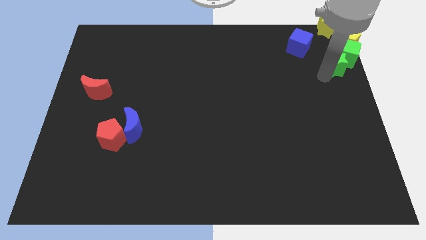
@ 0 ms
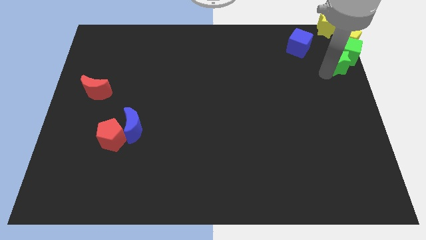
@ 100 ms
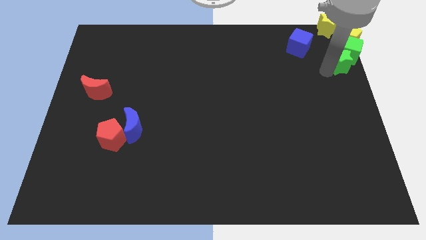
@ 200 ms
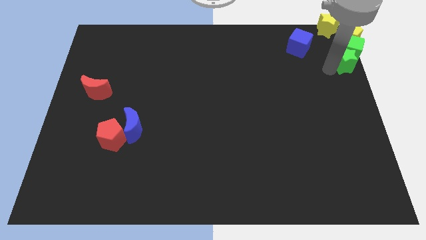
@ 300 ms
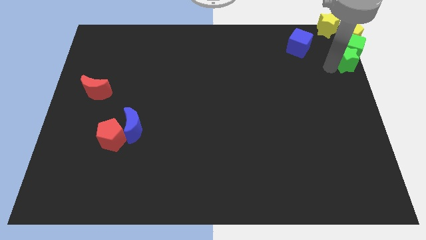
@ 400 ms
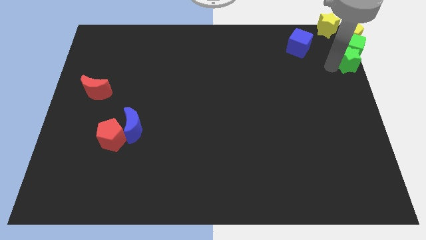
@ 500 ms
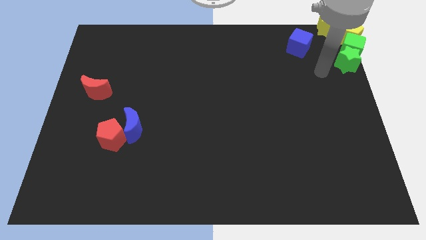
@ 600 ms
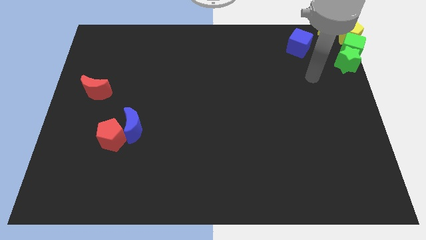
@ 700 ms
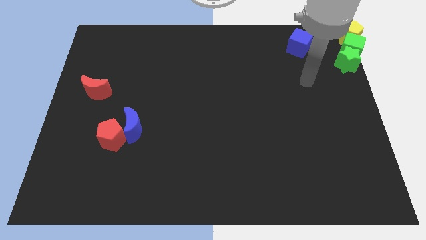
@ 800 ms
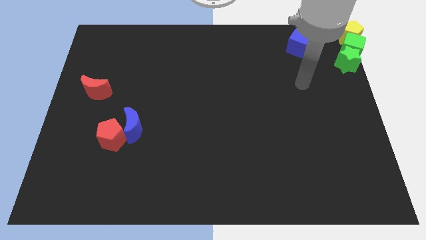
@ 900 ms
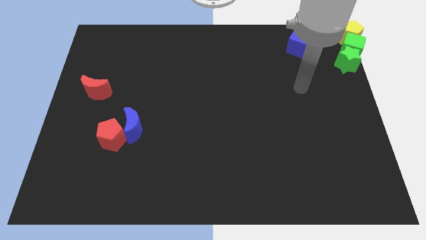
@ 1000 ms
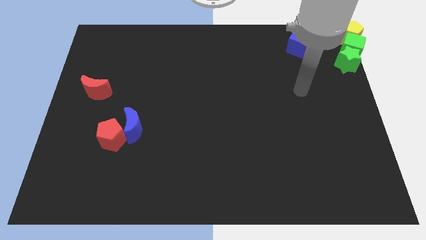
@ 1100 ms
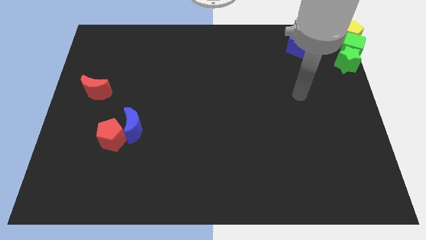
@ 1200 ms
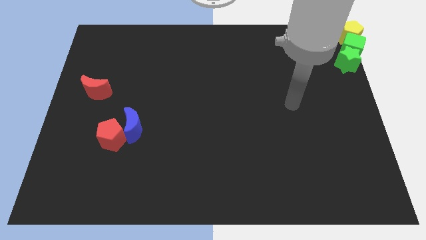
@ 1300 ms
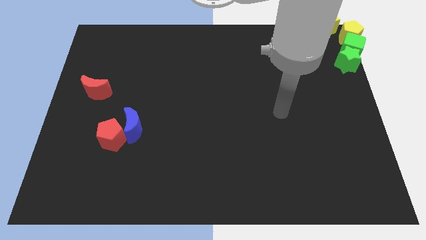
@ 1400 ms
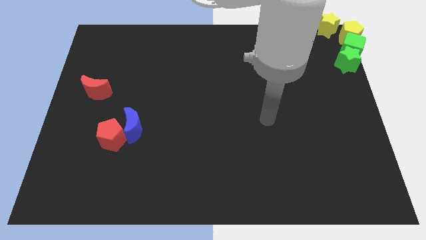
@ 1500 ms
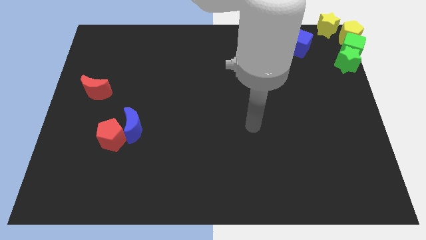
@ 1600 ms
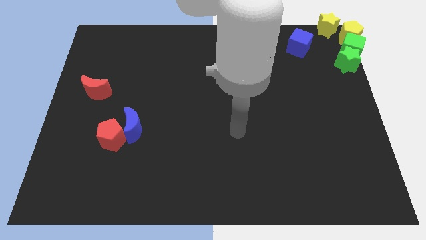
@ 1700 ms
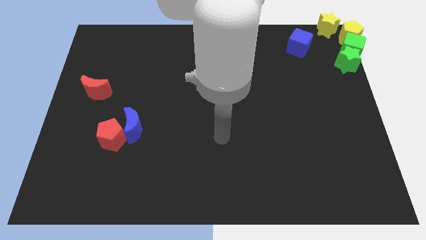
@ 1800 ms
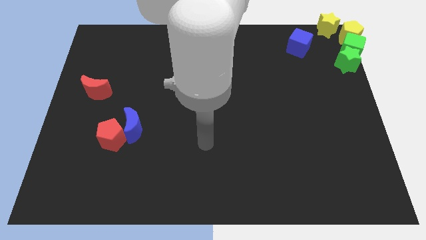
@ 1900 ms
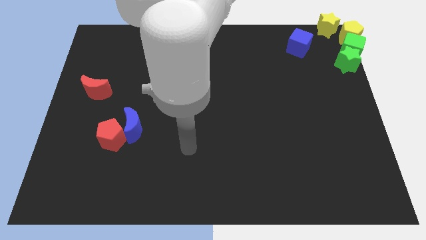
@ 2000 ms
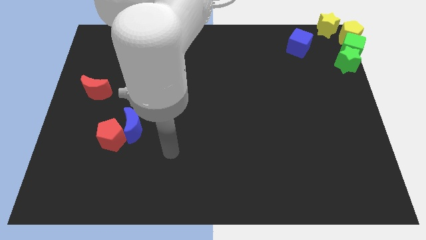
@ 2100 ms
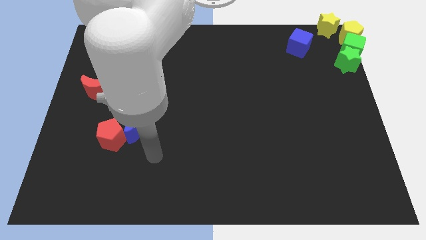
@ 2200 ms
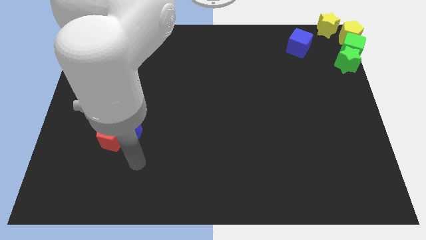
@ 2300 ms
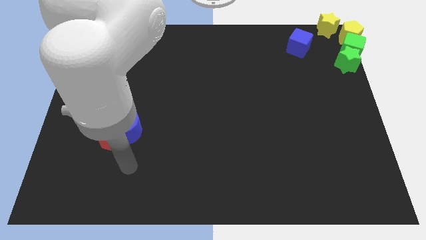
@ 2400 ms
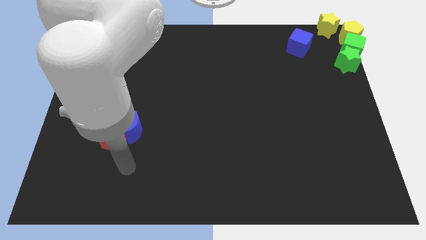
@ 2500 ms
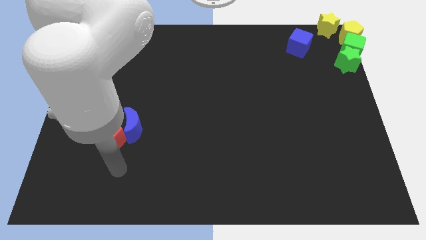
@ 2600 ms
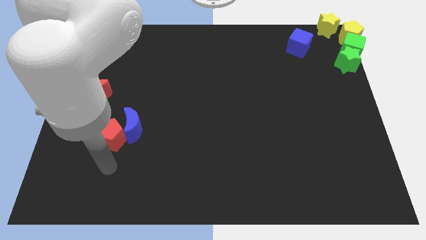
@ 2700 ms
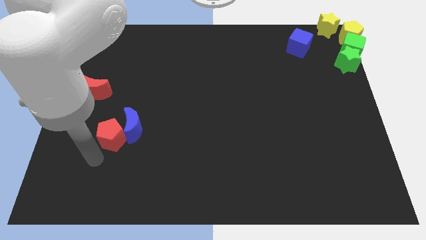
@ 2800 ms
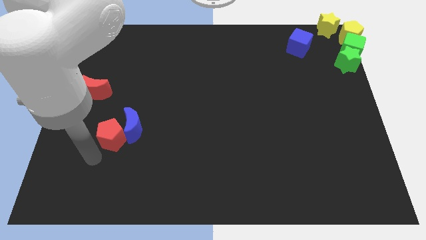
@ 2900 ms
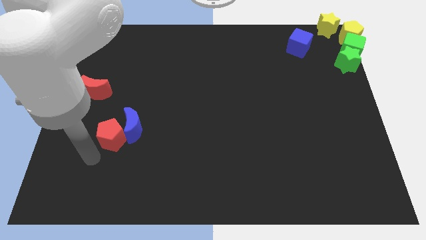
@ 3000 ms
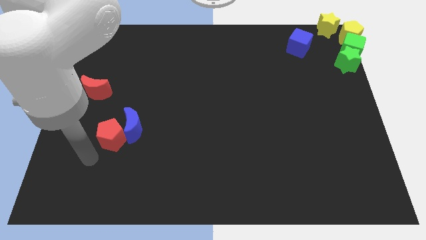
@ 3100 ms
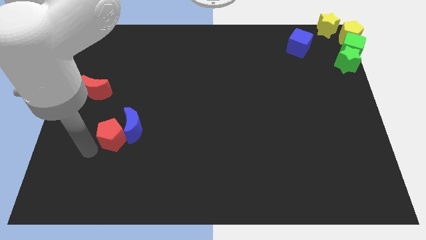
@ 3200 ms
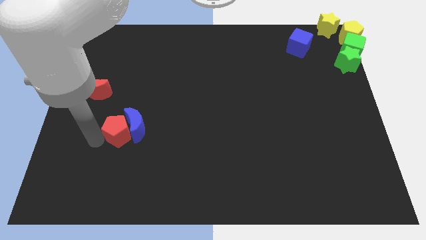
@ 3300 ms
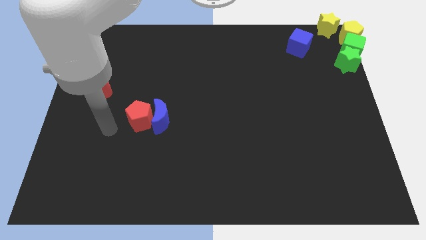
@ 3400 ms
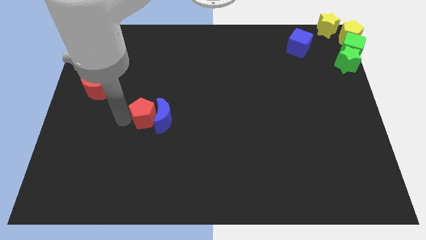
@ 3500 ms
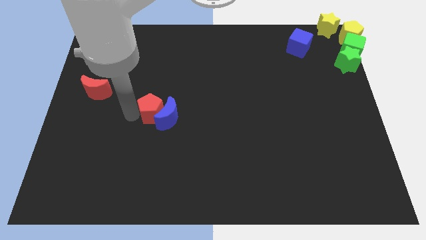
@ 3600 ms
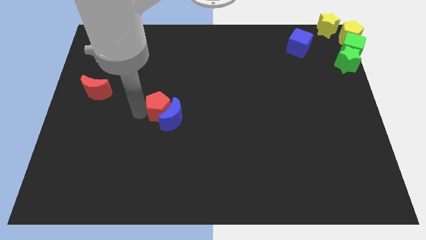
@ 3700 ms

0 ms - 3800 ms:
push the red pentagon along with the blue crescent to the right

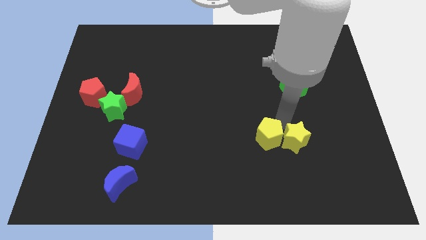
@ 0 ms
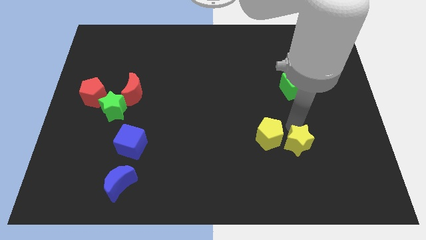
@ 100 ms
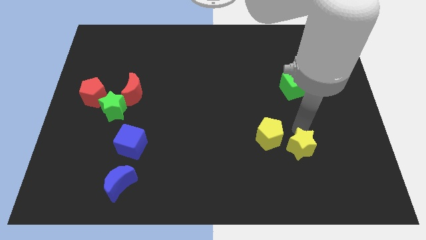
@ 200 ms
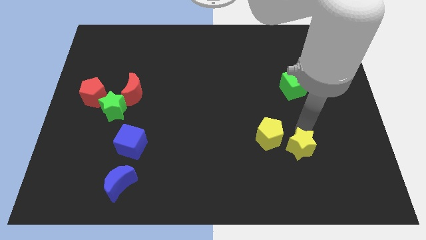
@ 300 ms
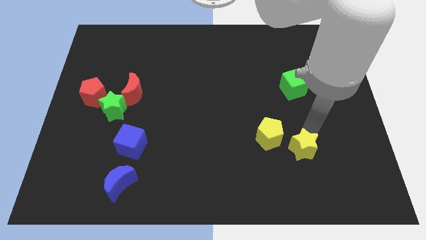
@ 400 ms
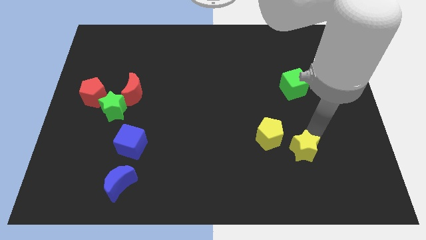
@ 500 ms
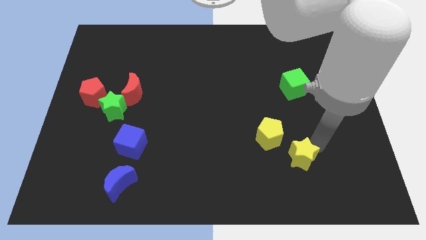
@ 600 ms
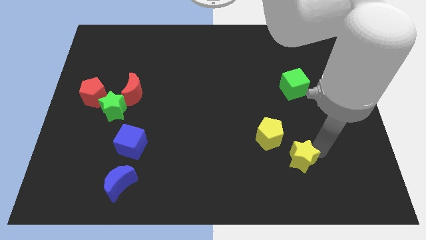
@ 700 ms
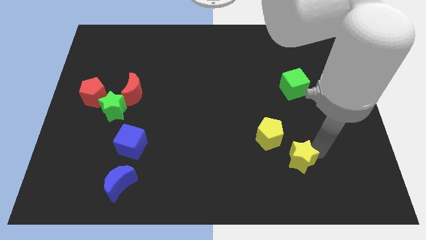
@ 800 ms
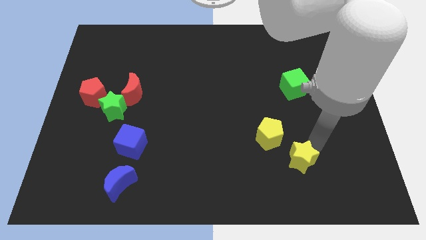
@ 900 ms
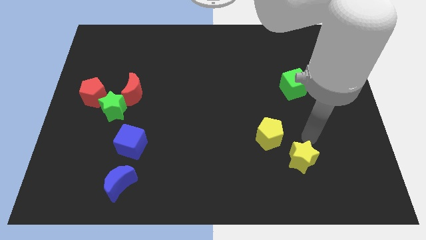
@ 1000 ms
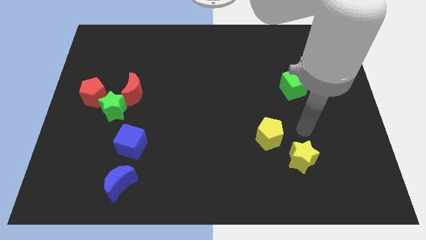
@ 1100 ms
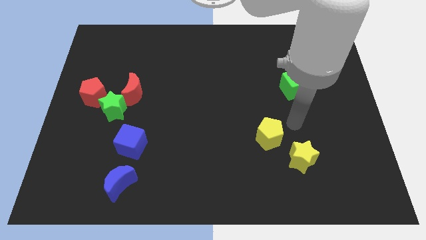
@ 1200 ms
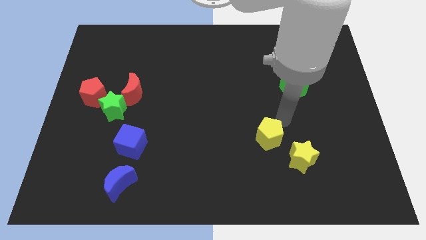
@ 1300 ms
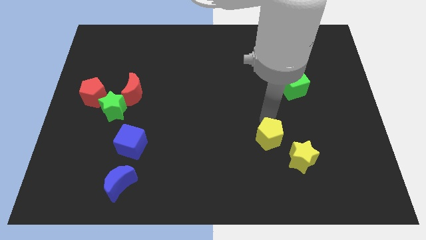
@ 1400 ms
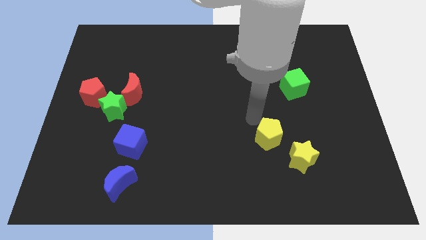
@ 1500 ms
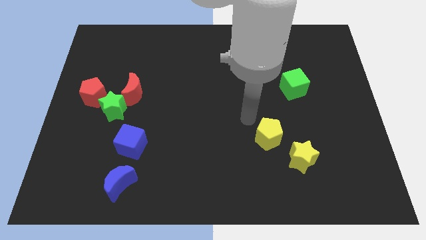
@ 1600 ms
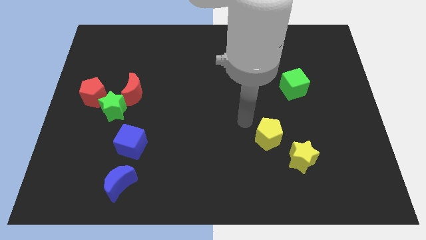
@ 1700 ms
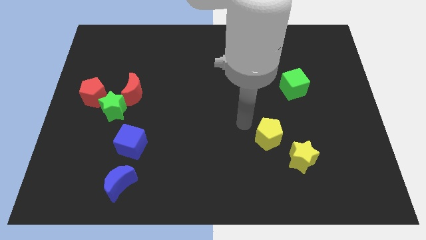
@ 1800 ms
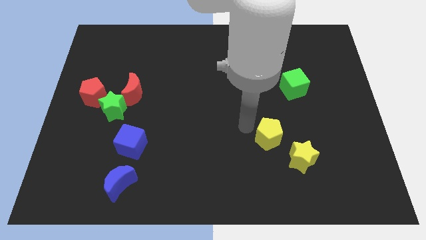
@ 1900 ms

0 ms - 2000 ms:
place the yellow star vertically below the green cube

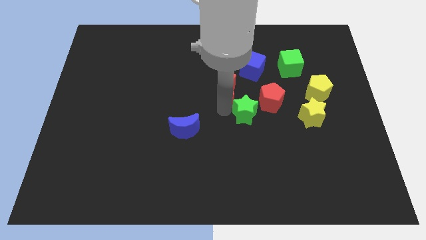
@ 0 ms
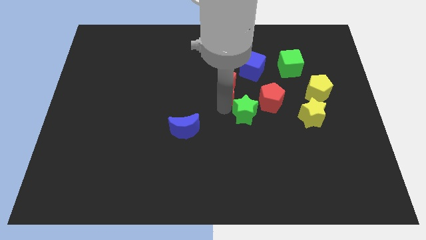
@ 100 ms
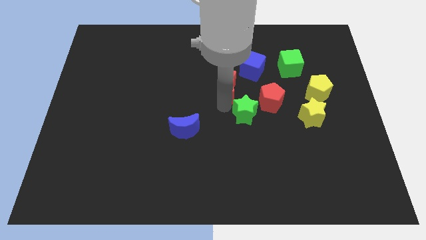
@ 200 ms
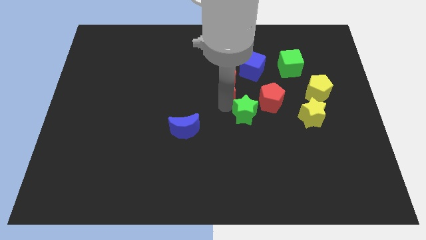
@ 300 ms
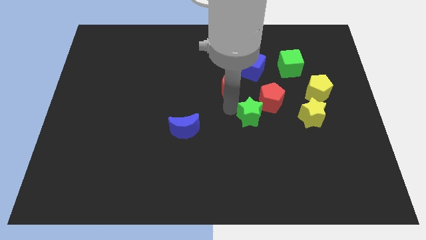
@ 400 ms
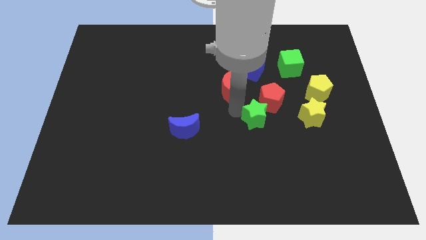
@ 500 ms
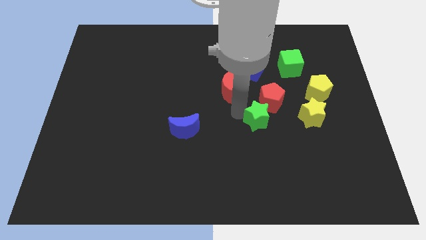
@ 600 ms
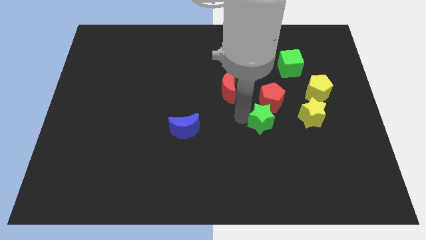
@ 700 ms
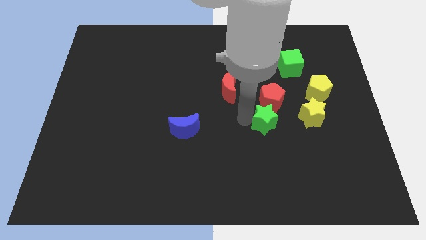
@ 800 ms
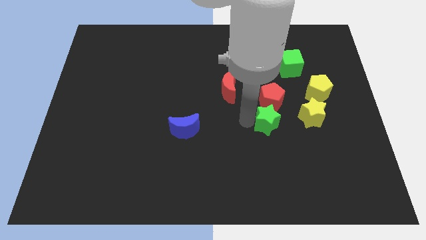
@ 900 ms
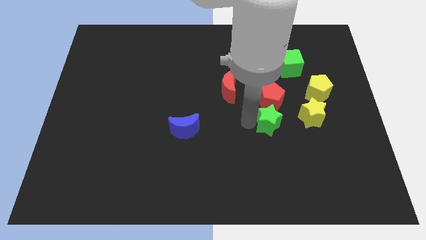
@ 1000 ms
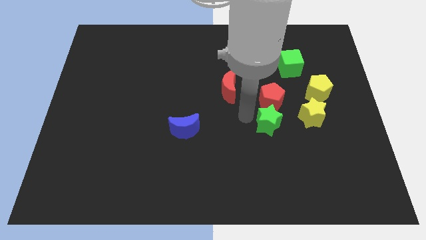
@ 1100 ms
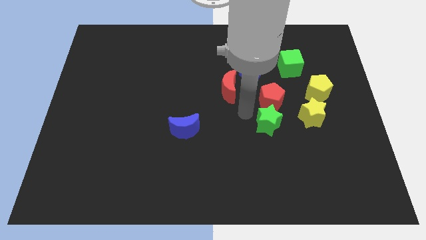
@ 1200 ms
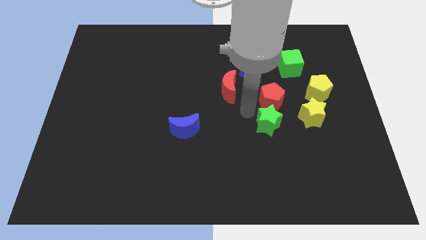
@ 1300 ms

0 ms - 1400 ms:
place the green star under the red pentagon

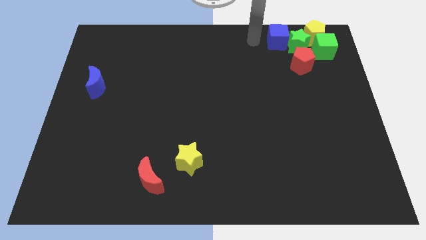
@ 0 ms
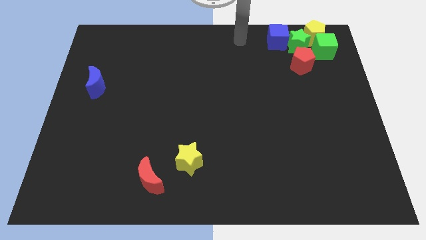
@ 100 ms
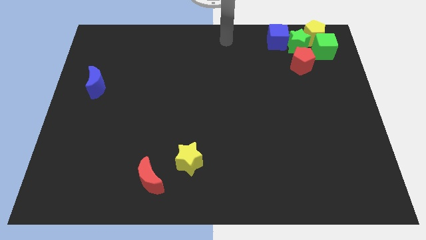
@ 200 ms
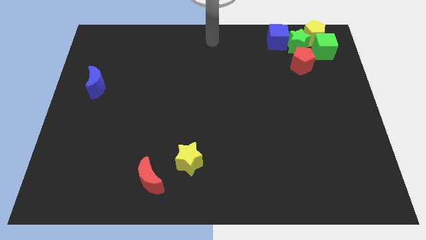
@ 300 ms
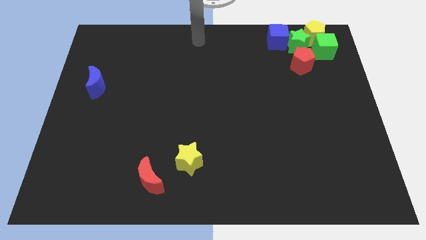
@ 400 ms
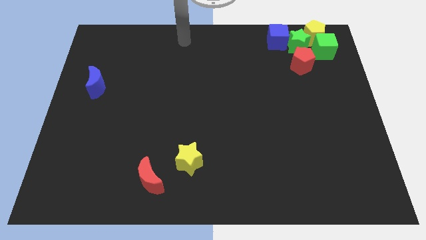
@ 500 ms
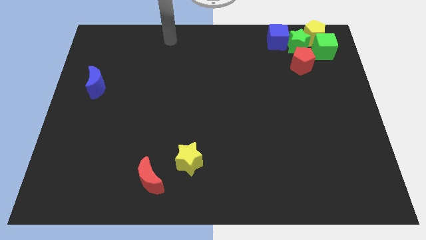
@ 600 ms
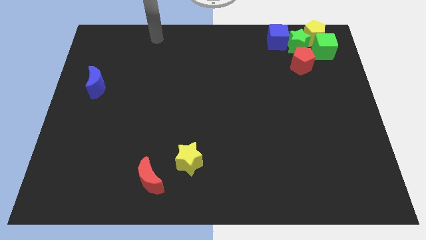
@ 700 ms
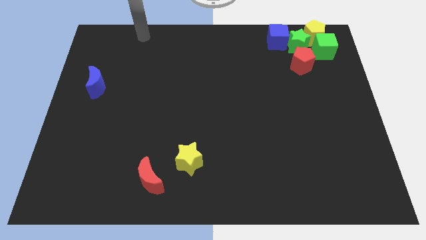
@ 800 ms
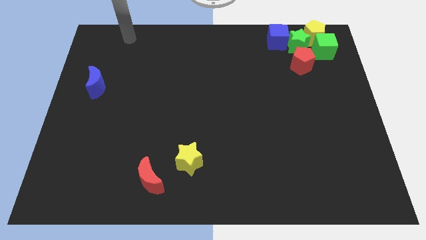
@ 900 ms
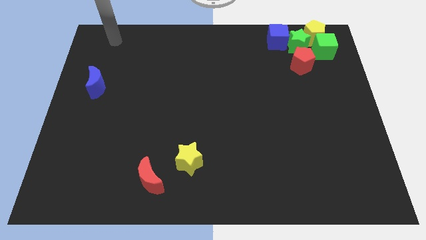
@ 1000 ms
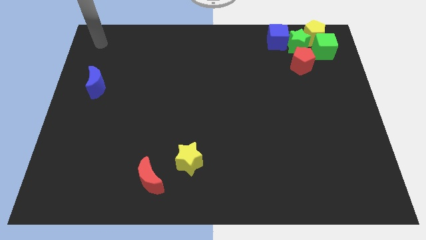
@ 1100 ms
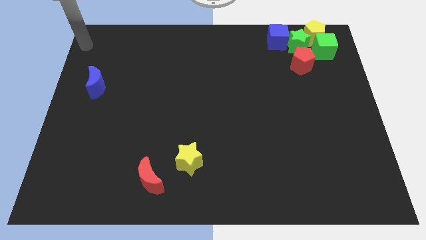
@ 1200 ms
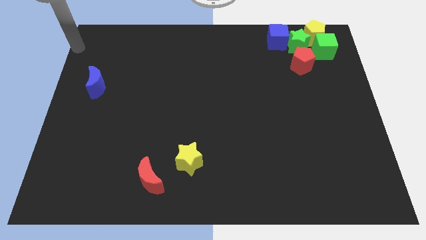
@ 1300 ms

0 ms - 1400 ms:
move your arm towards the top left of the board

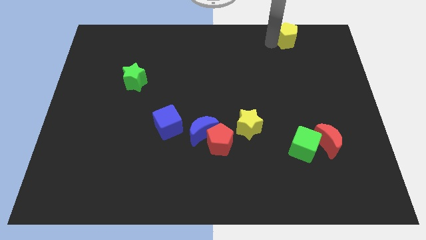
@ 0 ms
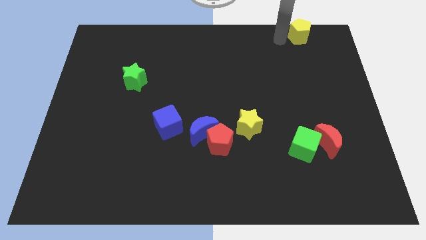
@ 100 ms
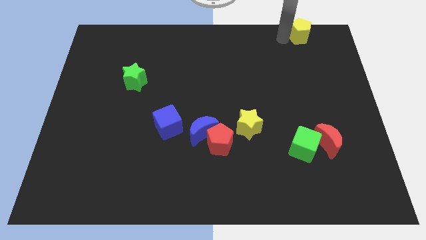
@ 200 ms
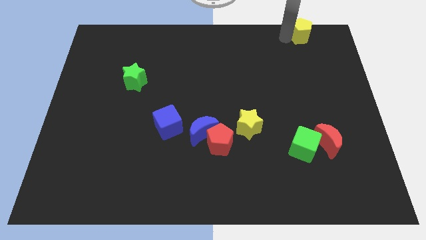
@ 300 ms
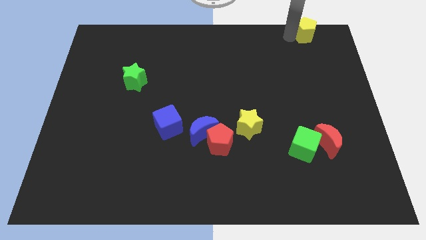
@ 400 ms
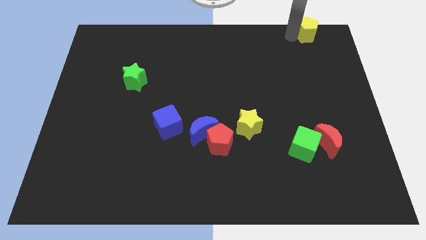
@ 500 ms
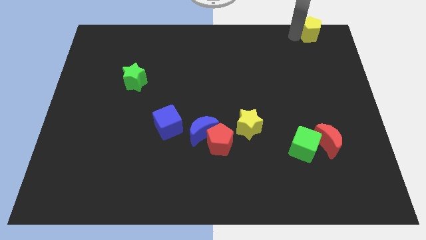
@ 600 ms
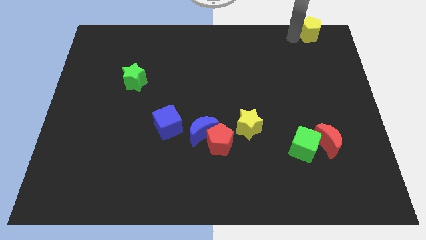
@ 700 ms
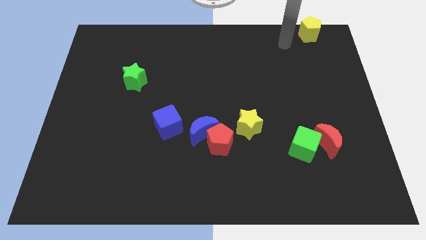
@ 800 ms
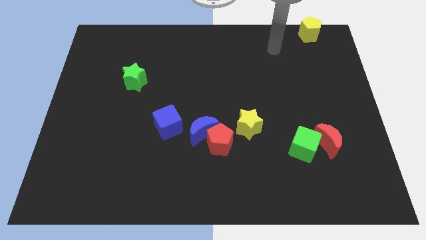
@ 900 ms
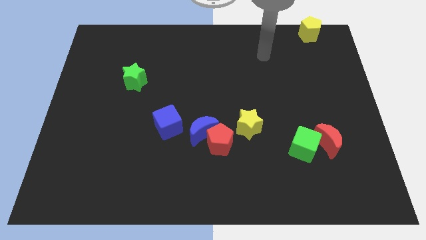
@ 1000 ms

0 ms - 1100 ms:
place yellow pentagon diagonally to yellow star
